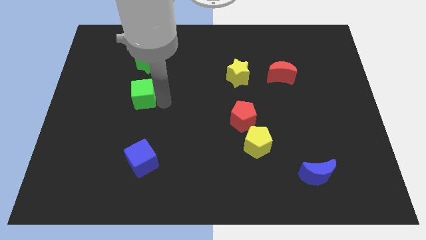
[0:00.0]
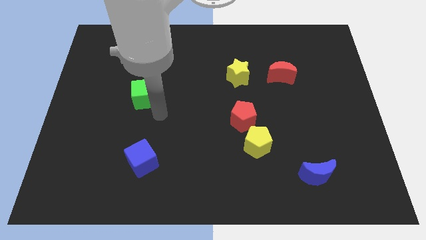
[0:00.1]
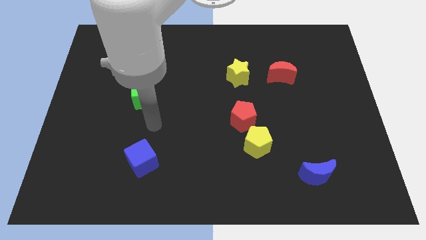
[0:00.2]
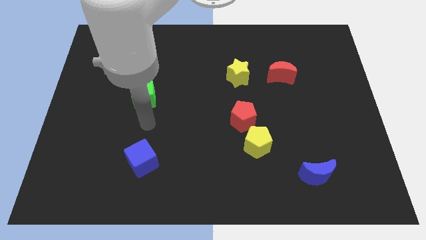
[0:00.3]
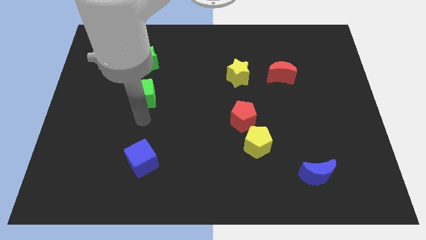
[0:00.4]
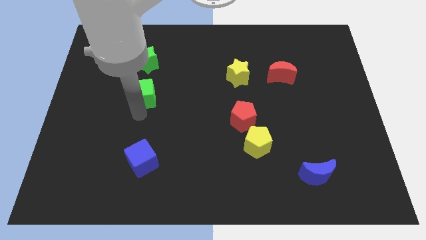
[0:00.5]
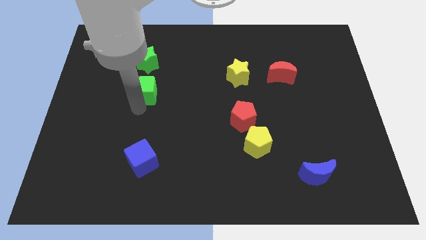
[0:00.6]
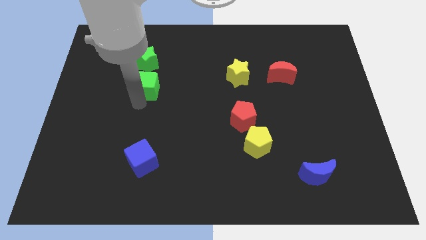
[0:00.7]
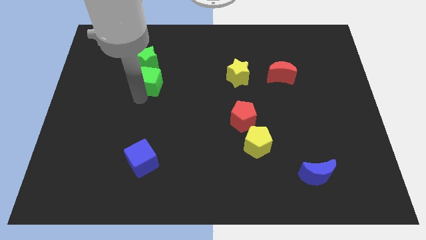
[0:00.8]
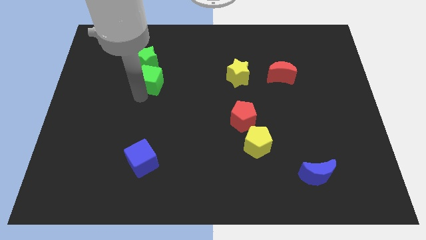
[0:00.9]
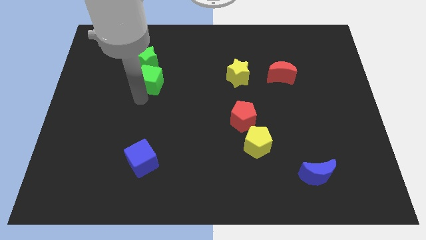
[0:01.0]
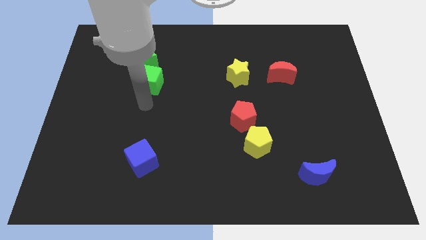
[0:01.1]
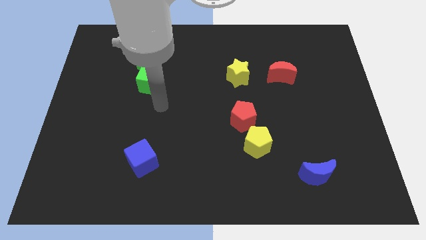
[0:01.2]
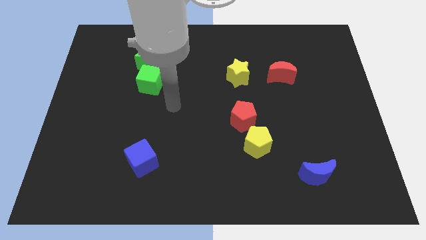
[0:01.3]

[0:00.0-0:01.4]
move green cube into the green star

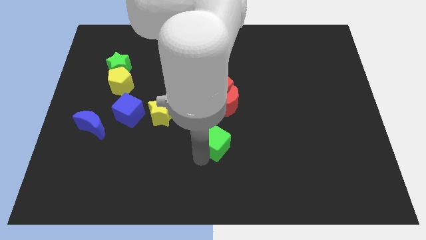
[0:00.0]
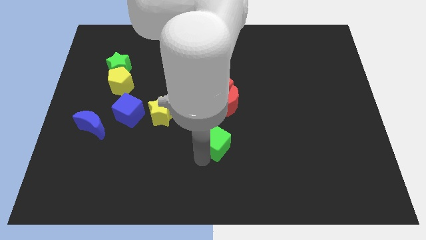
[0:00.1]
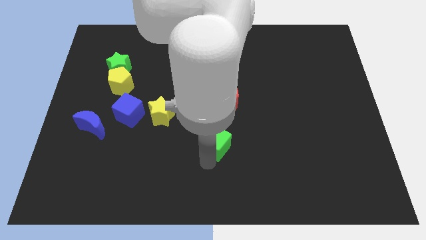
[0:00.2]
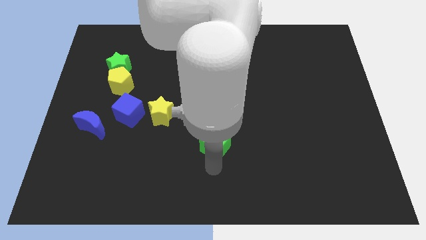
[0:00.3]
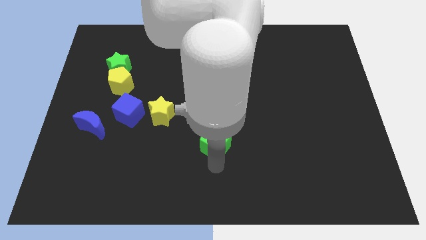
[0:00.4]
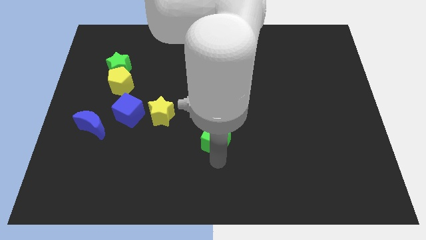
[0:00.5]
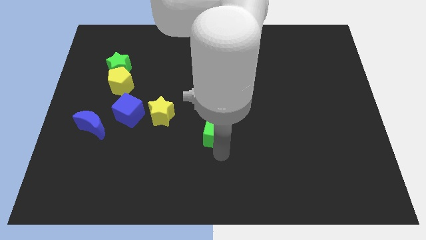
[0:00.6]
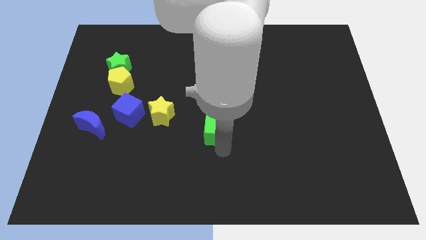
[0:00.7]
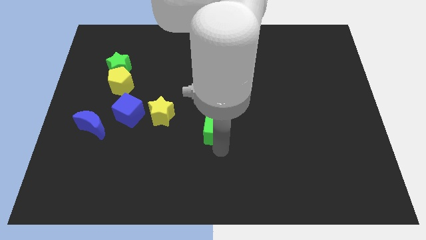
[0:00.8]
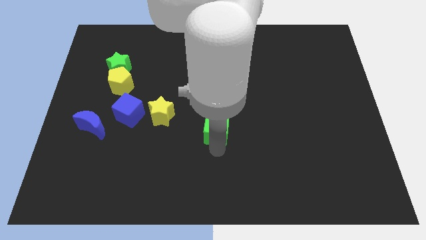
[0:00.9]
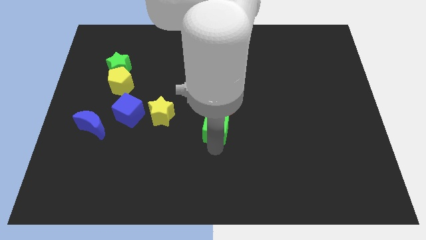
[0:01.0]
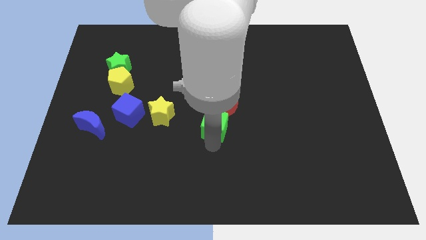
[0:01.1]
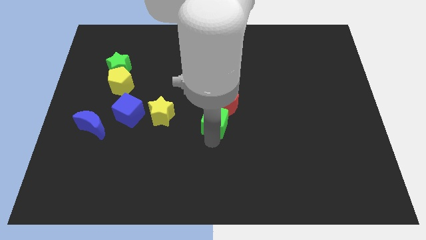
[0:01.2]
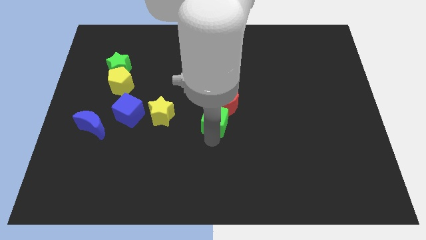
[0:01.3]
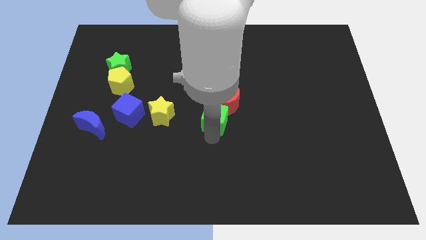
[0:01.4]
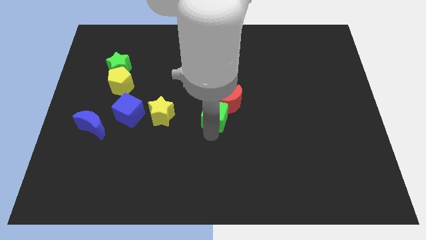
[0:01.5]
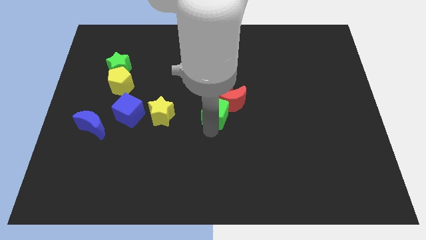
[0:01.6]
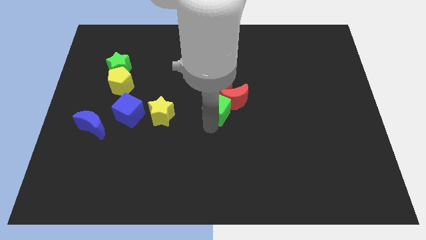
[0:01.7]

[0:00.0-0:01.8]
push the green cube into the red moon

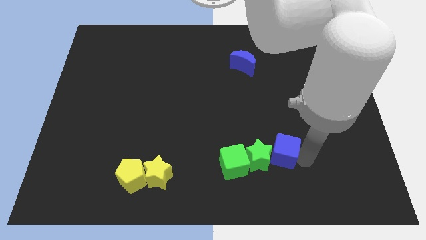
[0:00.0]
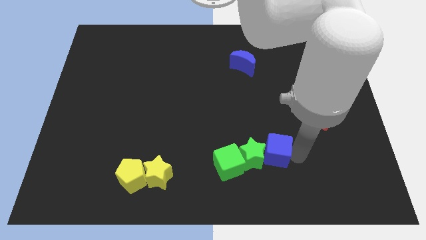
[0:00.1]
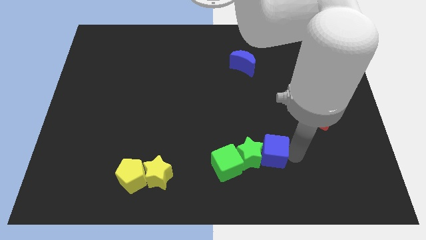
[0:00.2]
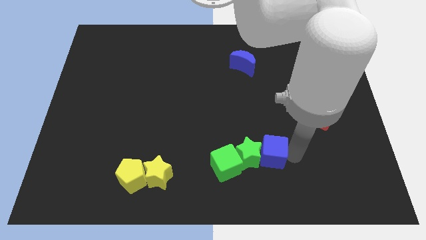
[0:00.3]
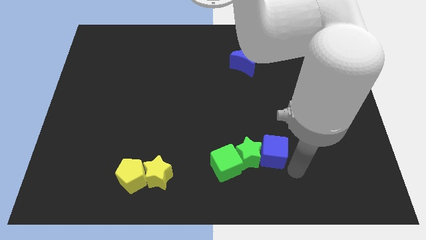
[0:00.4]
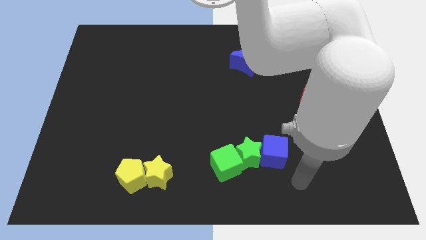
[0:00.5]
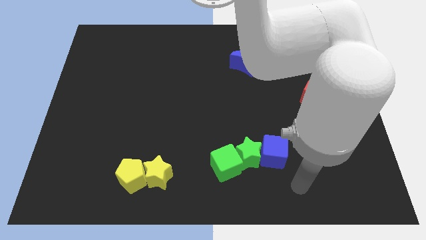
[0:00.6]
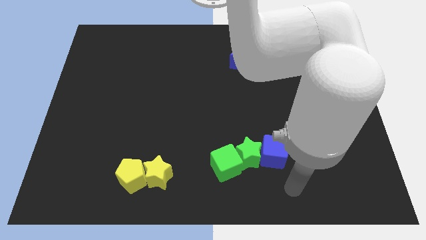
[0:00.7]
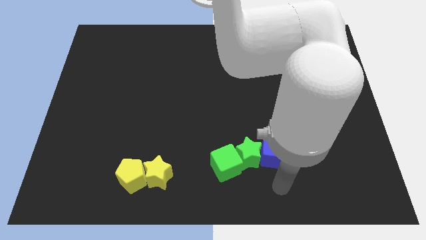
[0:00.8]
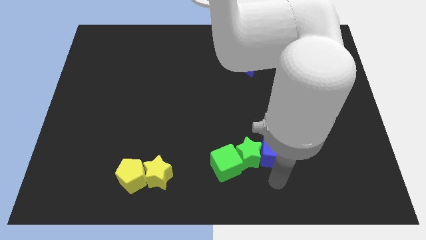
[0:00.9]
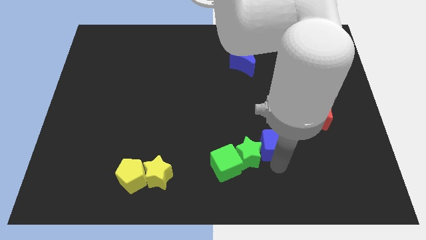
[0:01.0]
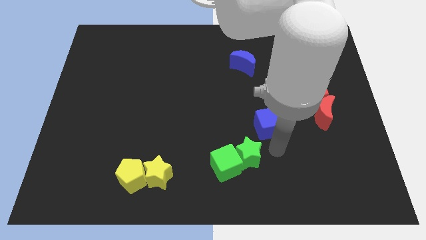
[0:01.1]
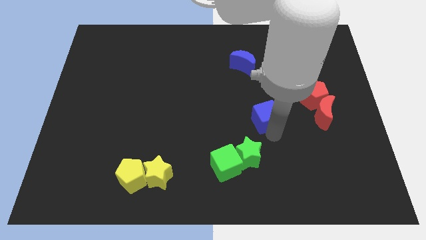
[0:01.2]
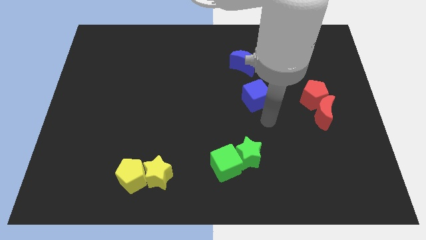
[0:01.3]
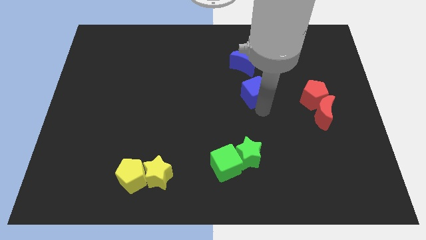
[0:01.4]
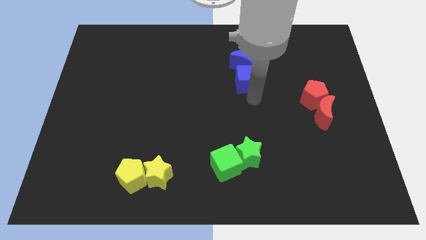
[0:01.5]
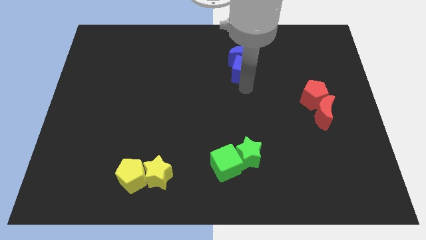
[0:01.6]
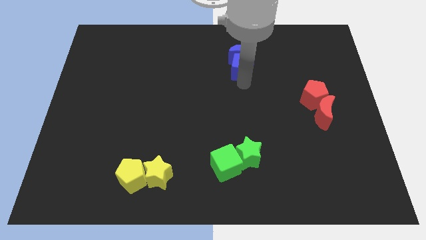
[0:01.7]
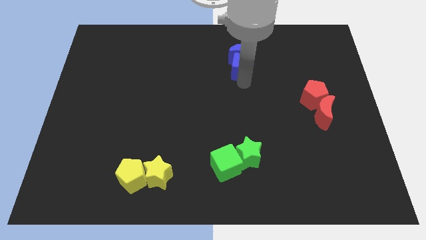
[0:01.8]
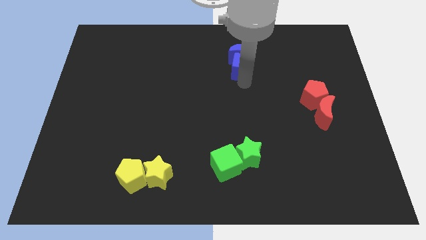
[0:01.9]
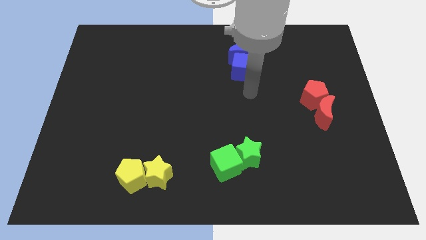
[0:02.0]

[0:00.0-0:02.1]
place the blue cube below the blue crescent

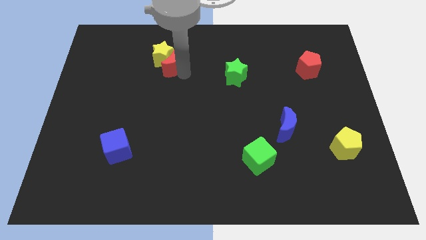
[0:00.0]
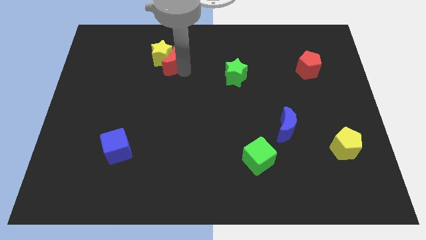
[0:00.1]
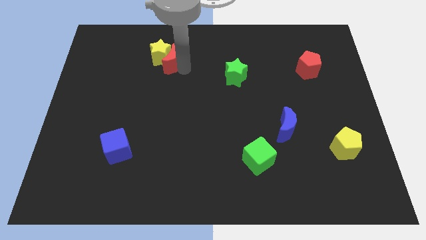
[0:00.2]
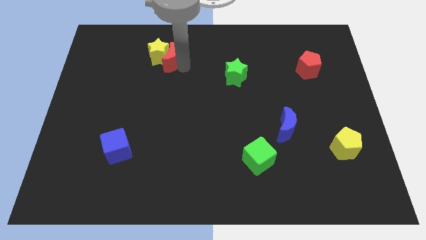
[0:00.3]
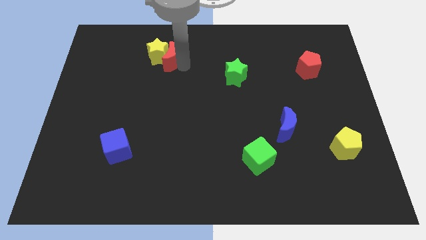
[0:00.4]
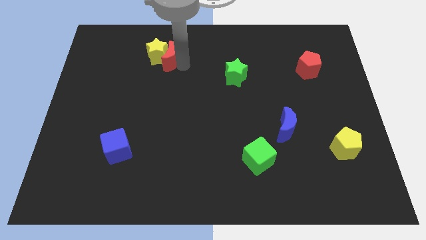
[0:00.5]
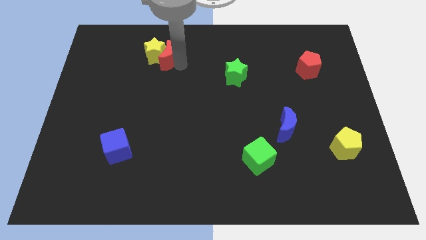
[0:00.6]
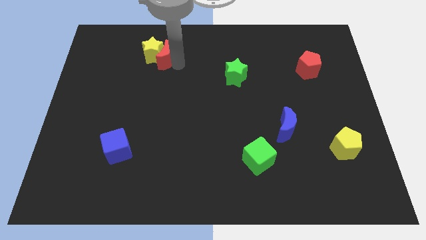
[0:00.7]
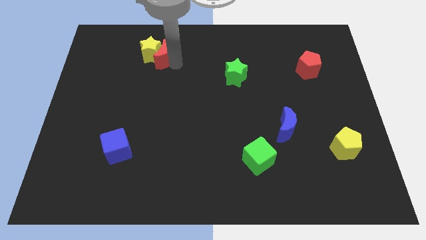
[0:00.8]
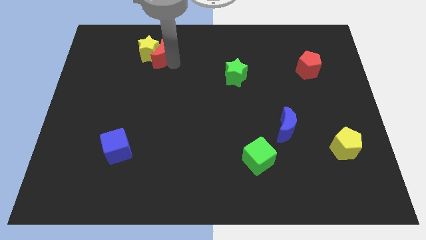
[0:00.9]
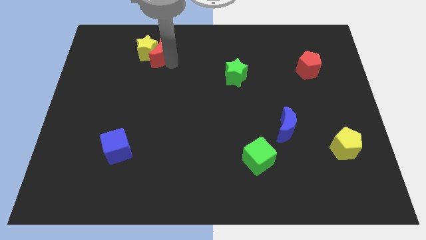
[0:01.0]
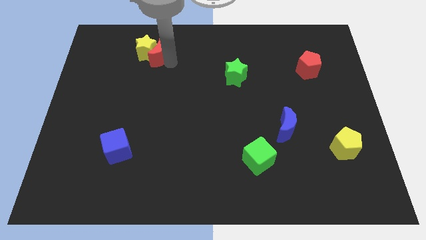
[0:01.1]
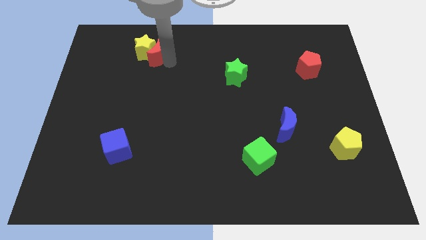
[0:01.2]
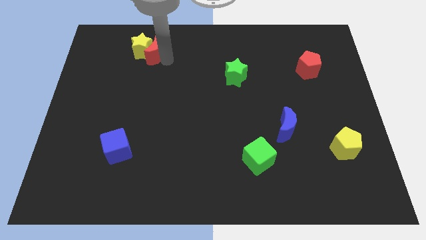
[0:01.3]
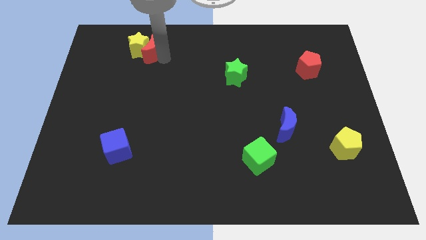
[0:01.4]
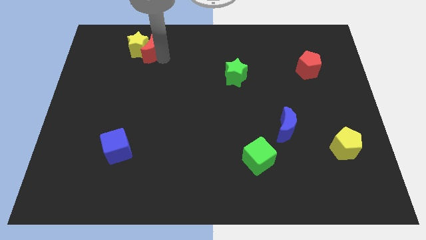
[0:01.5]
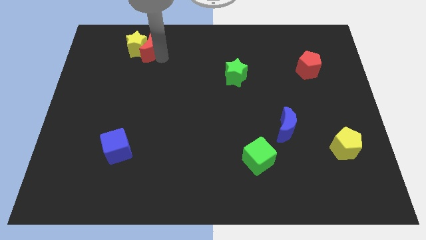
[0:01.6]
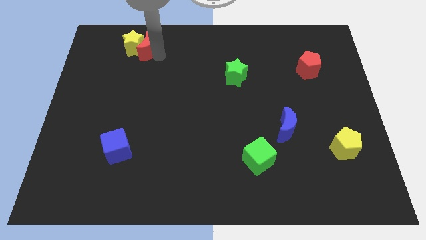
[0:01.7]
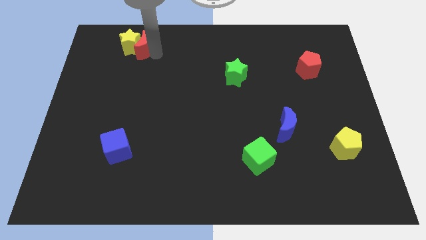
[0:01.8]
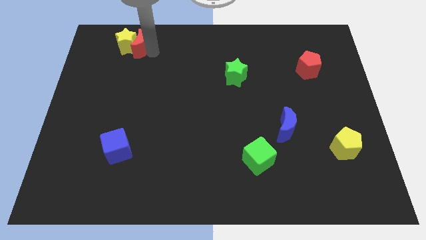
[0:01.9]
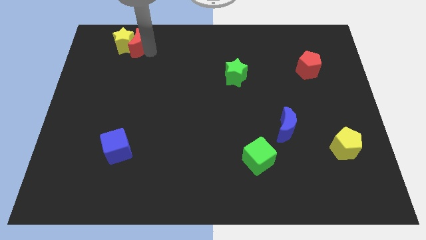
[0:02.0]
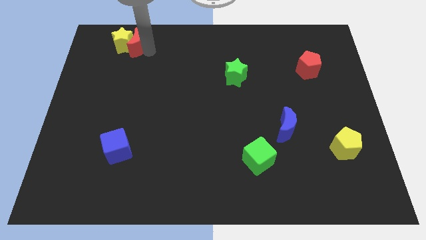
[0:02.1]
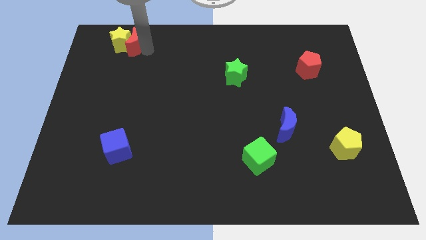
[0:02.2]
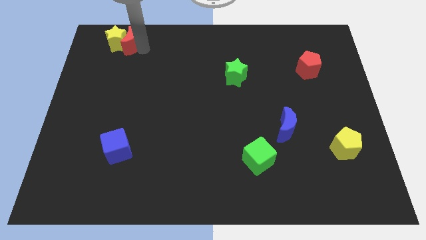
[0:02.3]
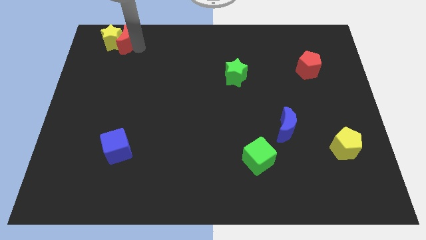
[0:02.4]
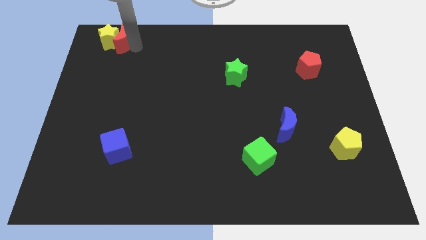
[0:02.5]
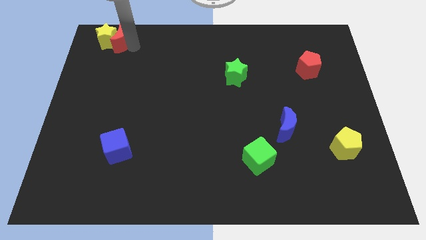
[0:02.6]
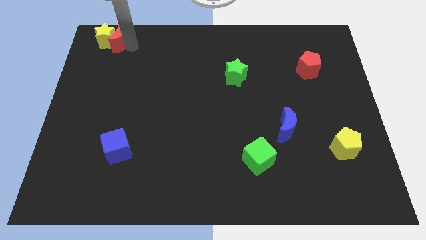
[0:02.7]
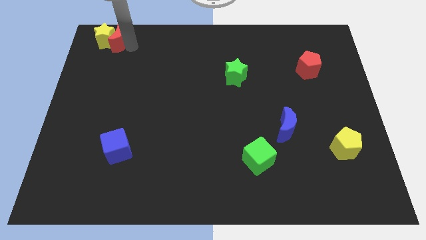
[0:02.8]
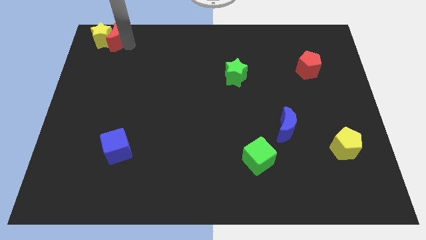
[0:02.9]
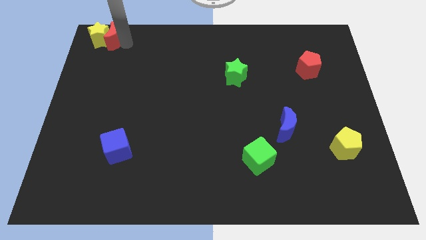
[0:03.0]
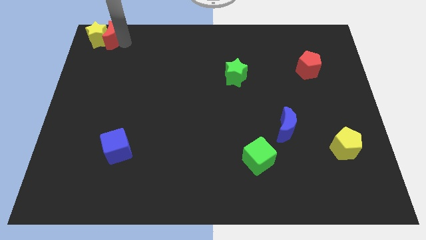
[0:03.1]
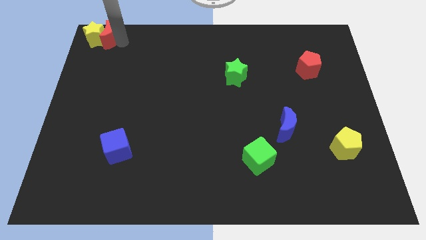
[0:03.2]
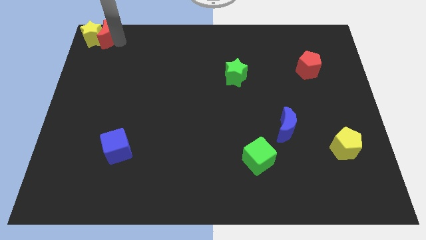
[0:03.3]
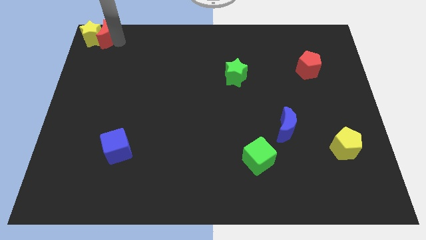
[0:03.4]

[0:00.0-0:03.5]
push the yellow star and red moon at the top left corner of the board

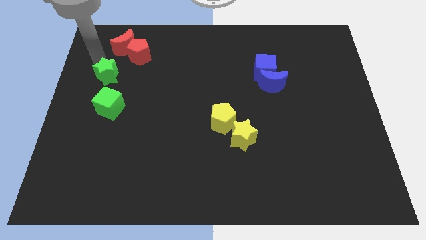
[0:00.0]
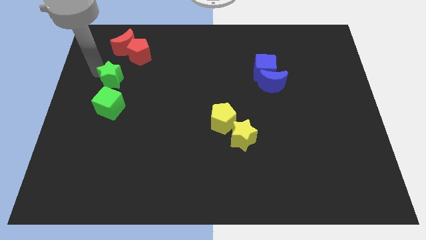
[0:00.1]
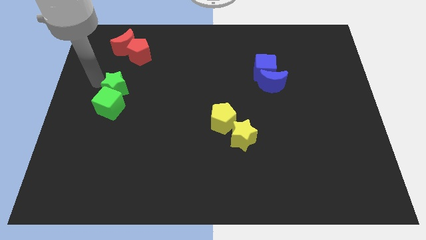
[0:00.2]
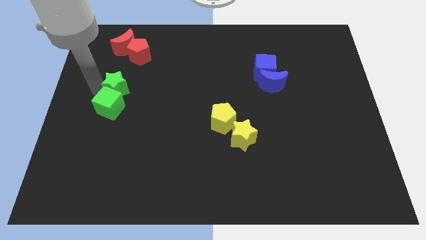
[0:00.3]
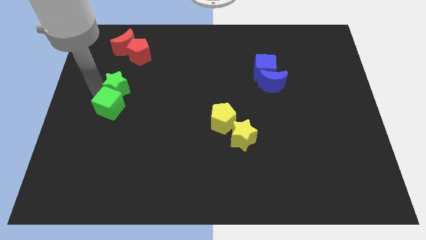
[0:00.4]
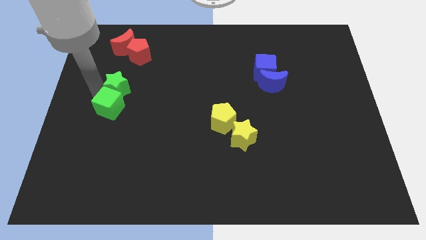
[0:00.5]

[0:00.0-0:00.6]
place the green star above the green cube
